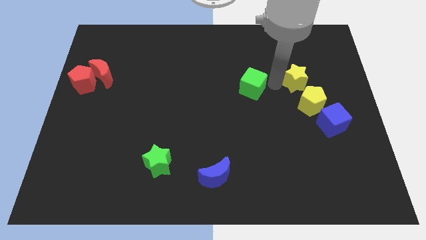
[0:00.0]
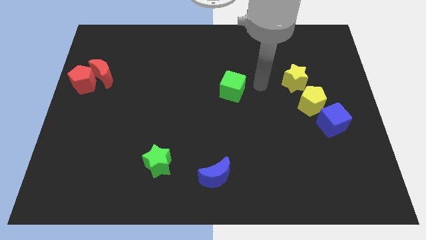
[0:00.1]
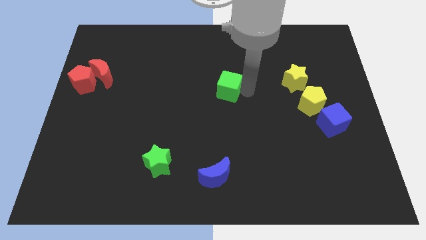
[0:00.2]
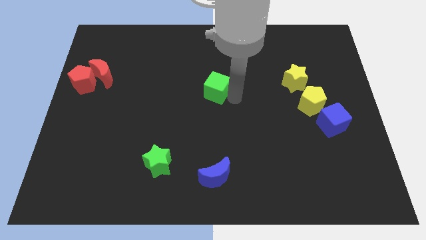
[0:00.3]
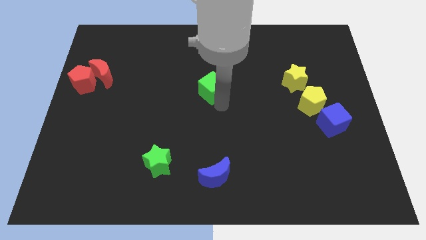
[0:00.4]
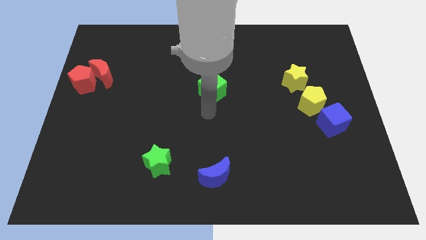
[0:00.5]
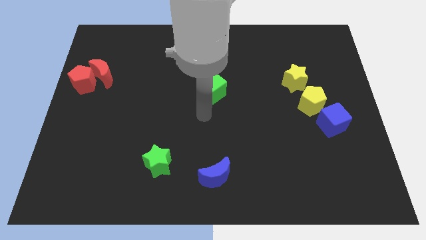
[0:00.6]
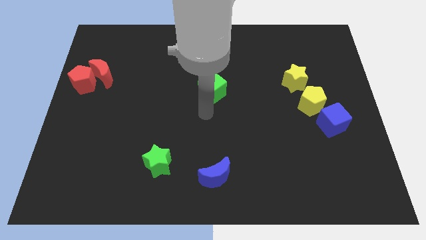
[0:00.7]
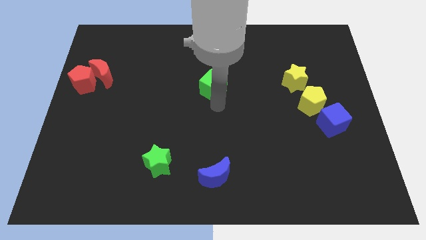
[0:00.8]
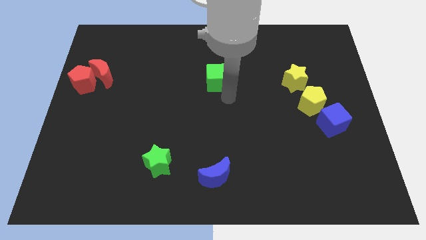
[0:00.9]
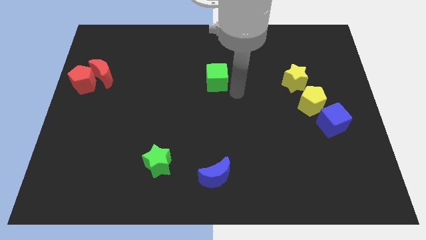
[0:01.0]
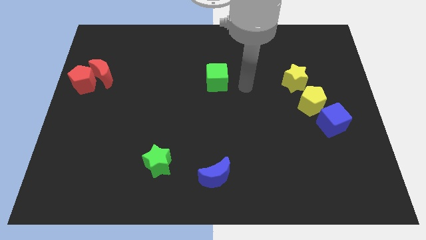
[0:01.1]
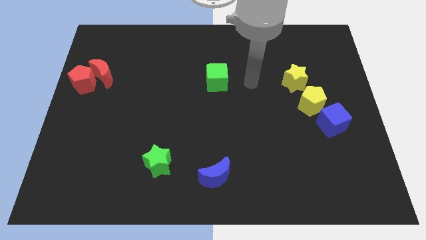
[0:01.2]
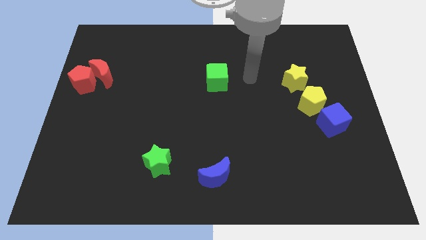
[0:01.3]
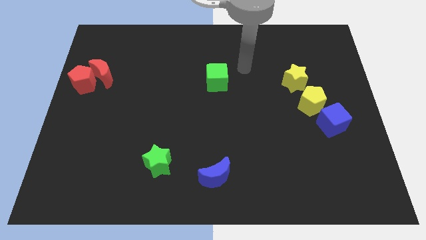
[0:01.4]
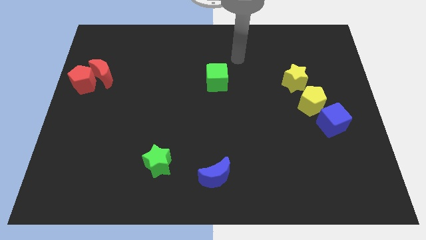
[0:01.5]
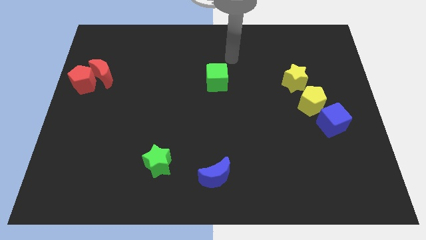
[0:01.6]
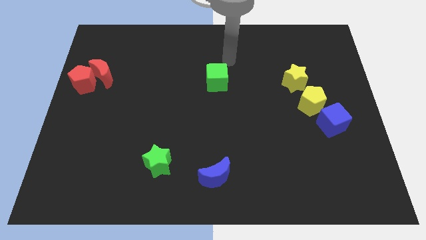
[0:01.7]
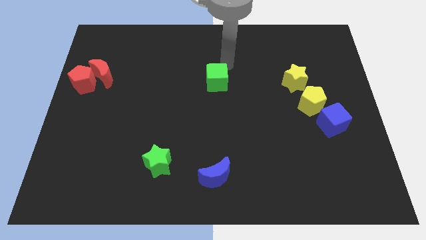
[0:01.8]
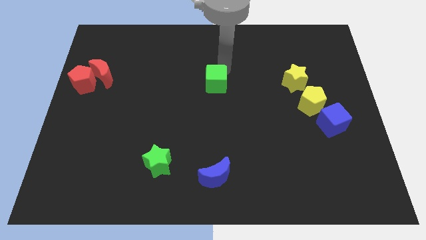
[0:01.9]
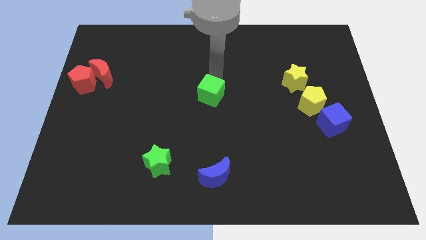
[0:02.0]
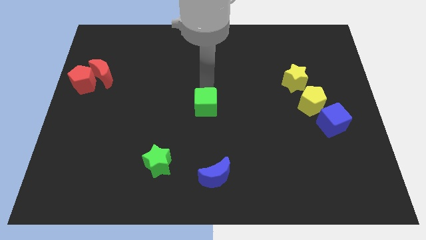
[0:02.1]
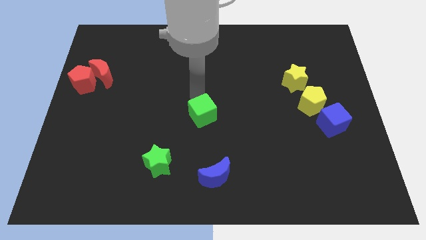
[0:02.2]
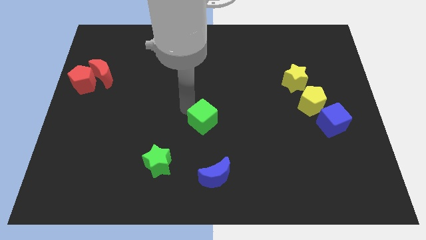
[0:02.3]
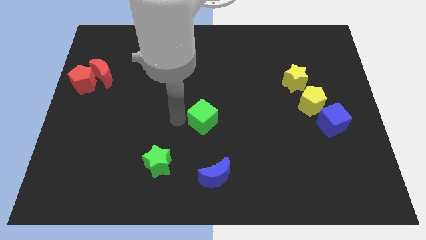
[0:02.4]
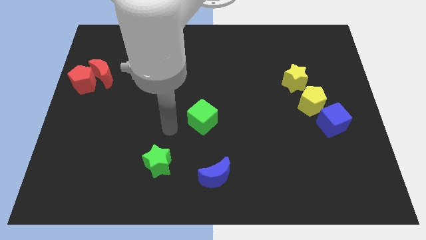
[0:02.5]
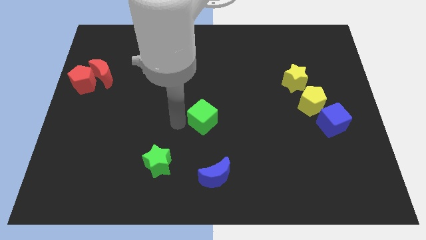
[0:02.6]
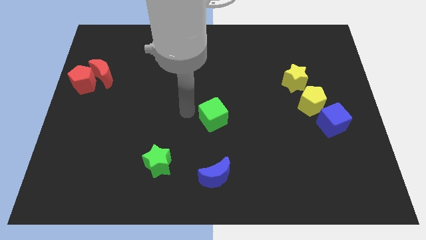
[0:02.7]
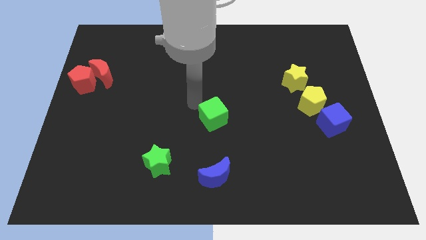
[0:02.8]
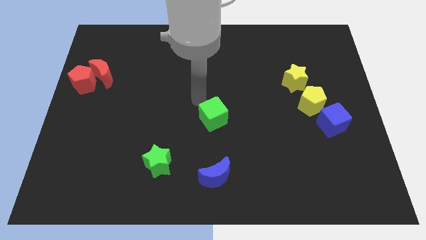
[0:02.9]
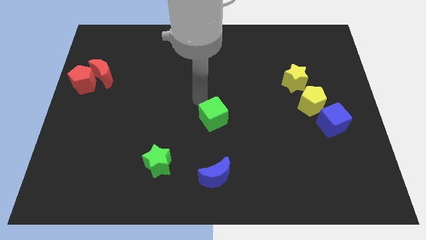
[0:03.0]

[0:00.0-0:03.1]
move the green cube towards the center of the board

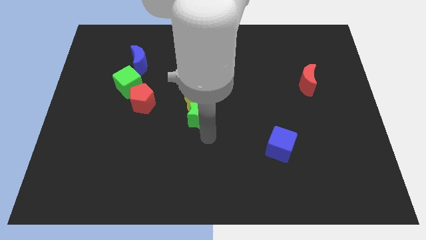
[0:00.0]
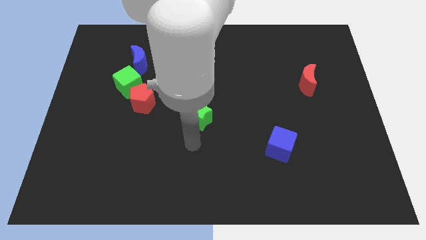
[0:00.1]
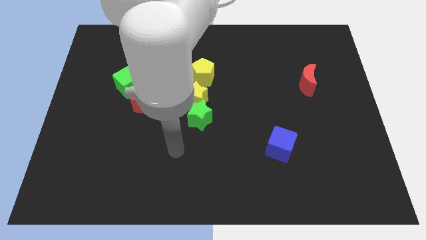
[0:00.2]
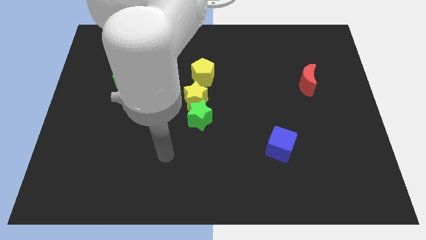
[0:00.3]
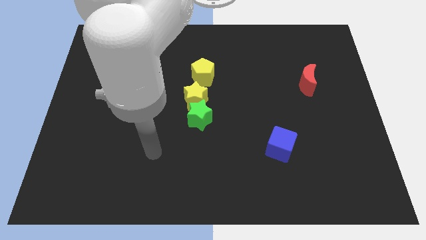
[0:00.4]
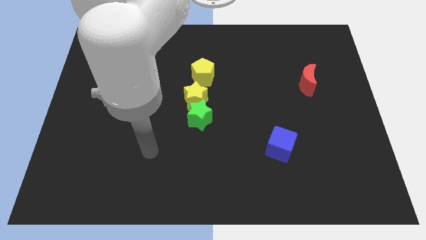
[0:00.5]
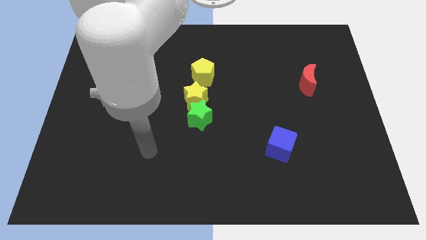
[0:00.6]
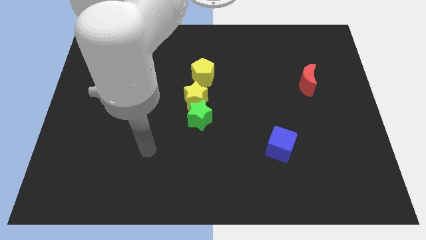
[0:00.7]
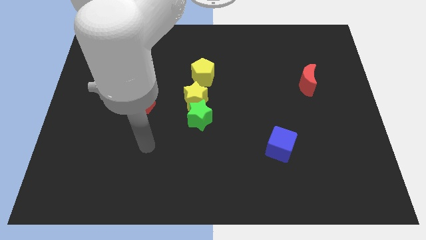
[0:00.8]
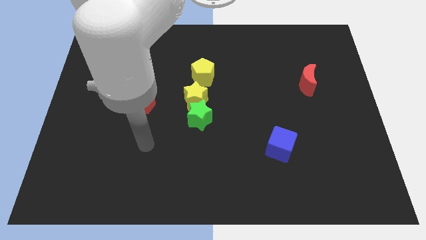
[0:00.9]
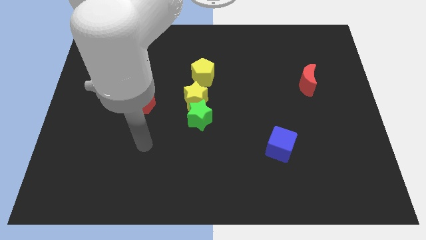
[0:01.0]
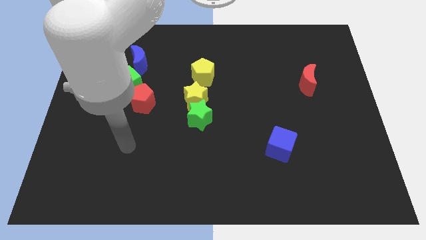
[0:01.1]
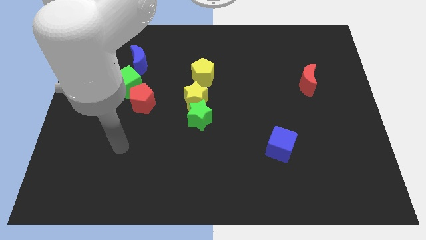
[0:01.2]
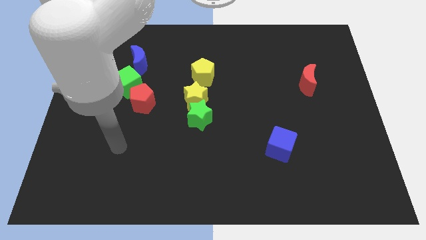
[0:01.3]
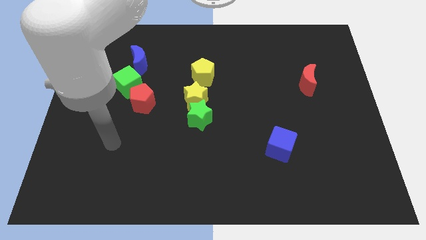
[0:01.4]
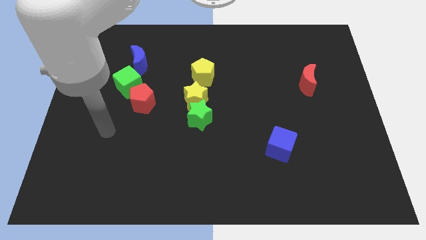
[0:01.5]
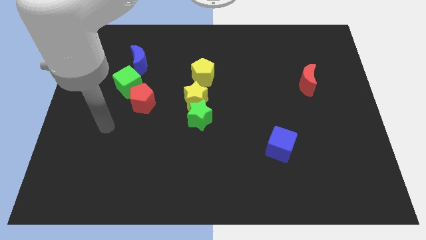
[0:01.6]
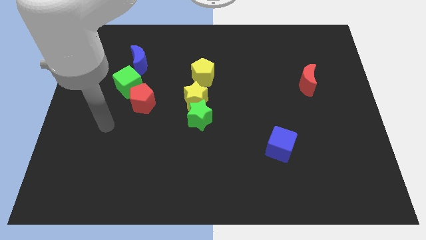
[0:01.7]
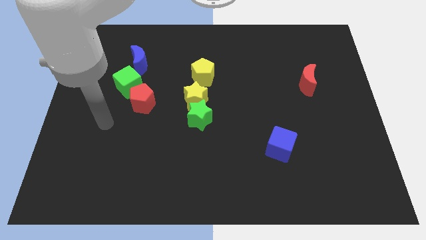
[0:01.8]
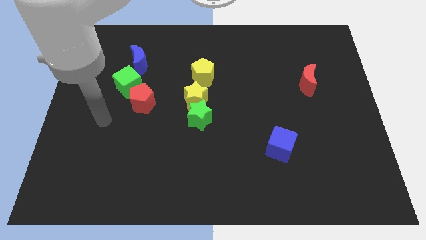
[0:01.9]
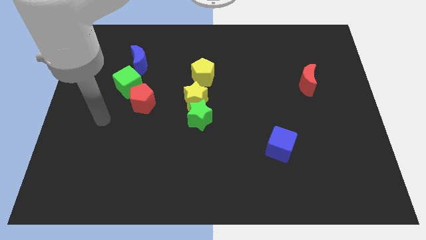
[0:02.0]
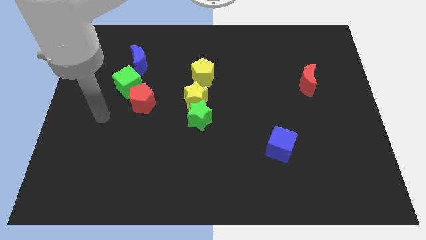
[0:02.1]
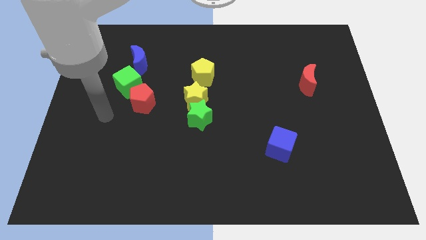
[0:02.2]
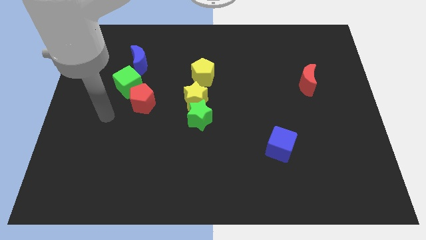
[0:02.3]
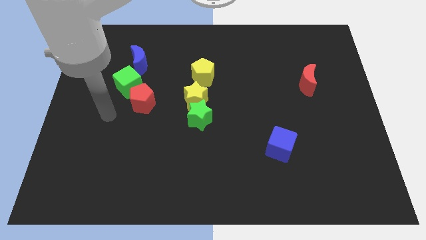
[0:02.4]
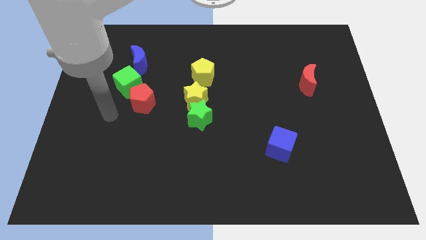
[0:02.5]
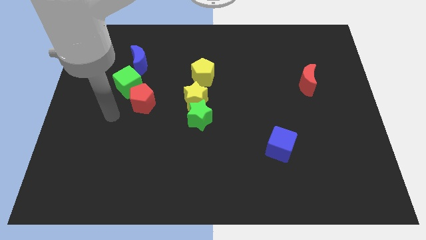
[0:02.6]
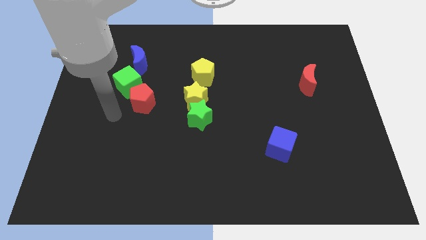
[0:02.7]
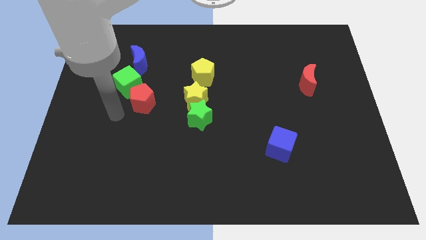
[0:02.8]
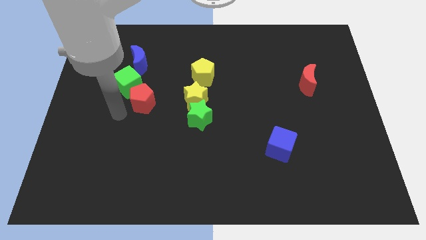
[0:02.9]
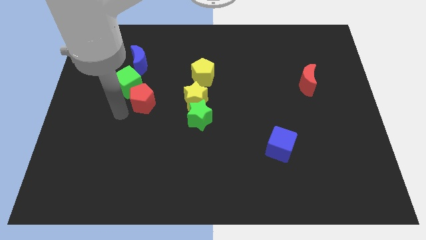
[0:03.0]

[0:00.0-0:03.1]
point your arm at the left of the red pentagon

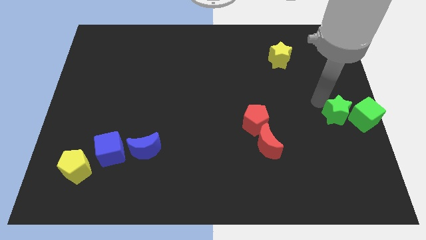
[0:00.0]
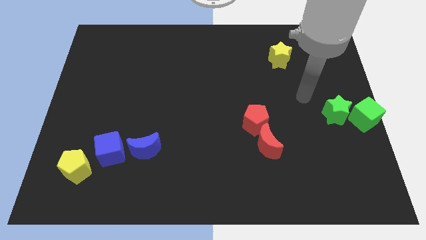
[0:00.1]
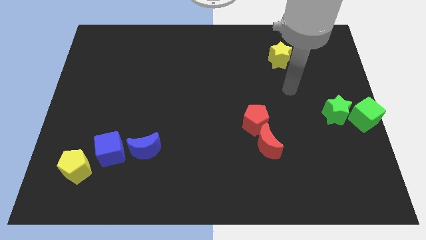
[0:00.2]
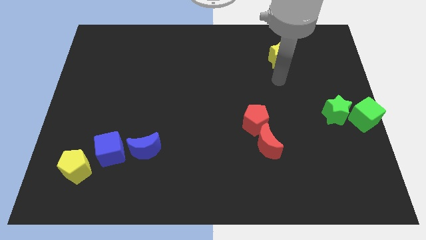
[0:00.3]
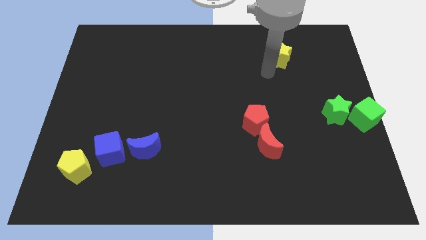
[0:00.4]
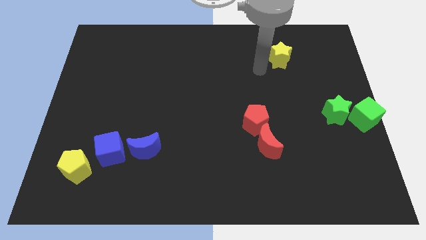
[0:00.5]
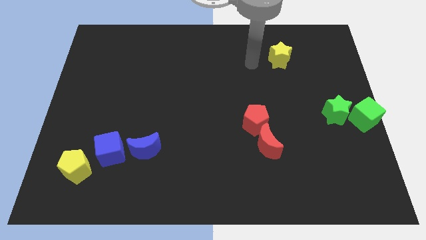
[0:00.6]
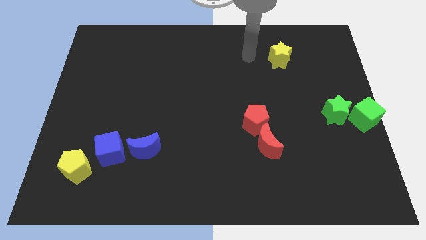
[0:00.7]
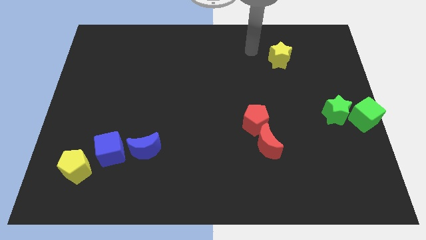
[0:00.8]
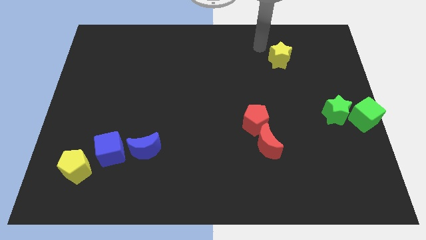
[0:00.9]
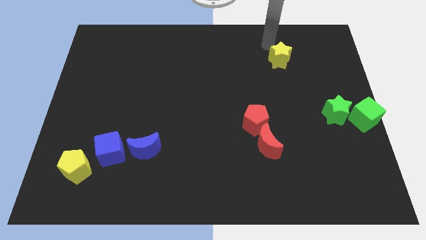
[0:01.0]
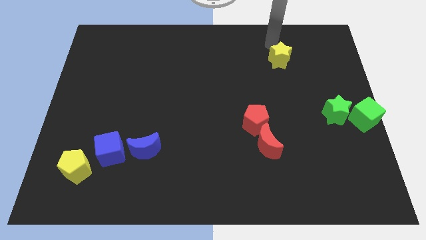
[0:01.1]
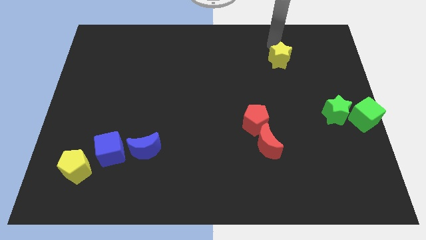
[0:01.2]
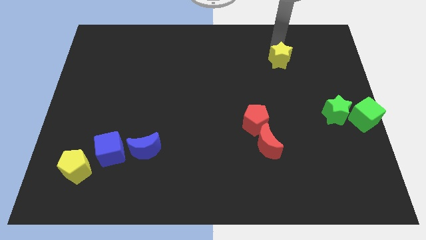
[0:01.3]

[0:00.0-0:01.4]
point your arm at the top of the yellow star

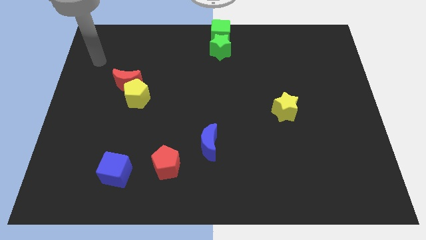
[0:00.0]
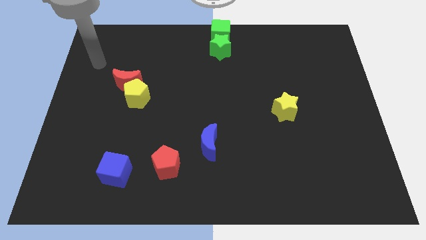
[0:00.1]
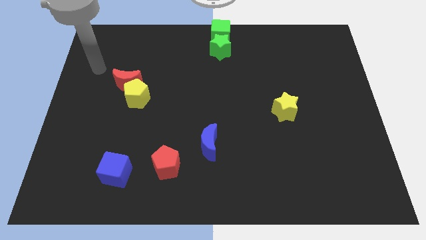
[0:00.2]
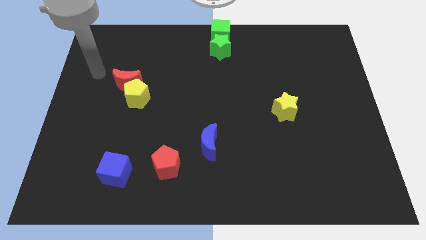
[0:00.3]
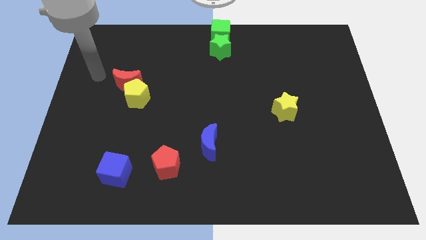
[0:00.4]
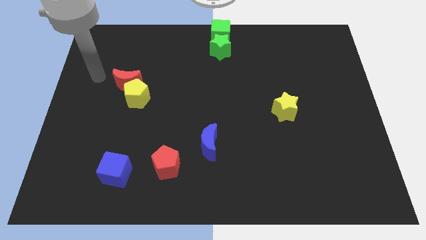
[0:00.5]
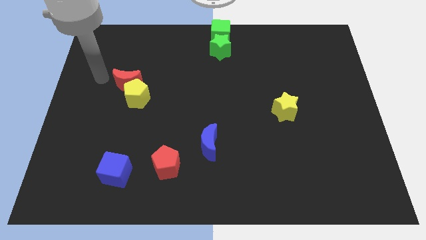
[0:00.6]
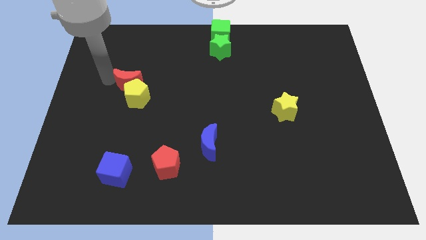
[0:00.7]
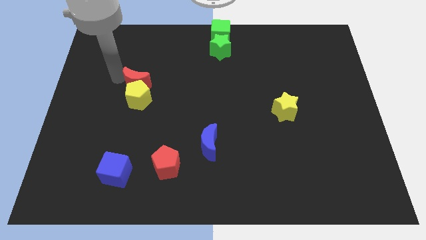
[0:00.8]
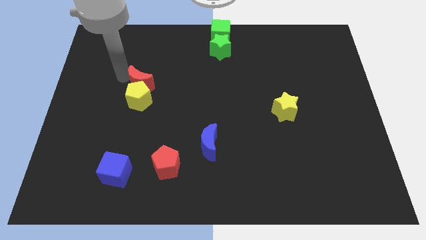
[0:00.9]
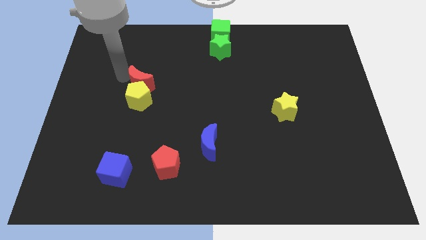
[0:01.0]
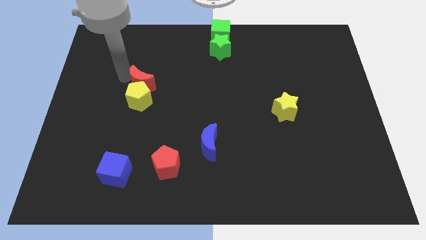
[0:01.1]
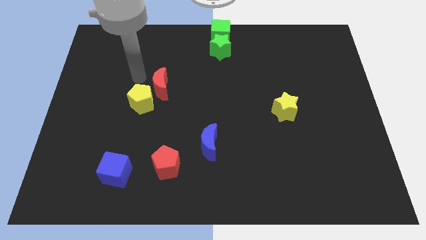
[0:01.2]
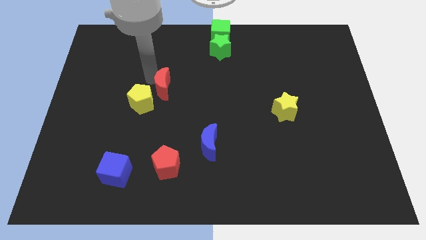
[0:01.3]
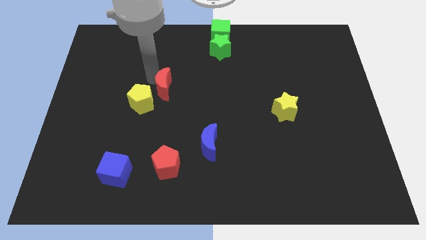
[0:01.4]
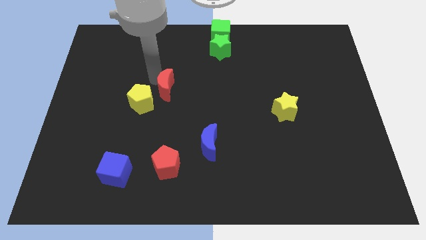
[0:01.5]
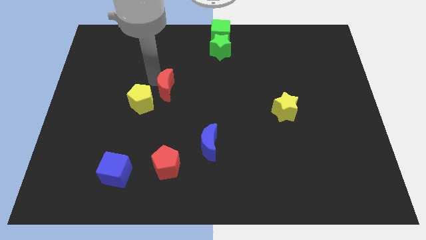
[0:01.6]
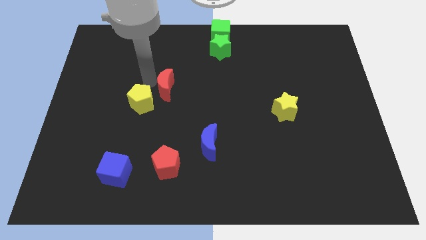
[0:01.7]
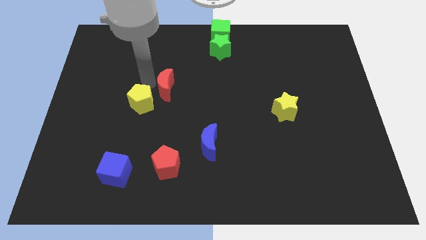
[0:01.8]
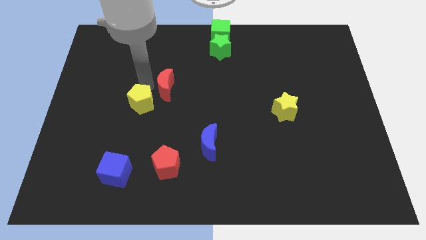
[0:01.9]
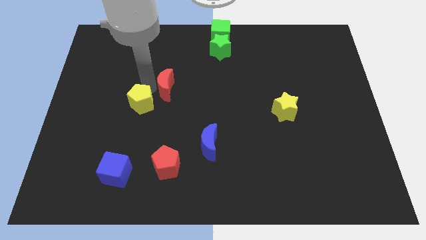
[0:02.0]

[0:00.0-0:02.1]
place the red crescent to the top right of the yellow pentagon
